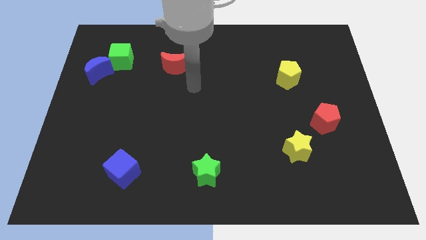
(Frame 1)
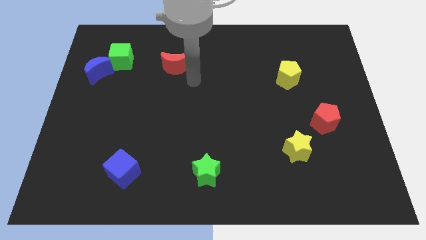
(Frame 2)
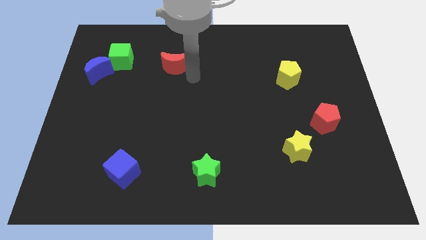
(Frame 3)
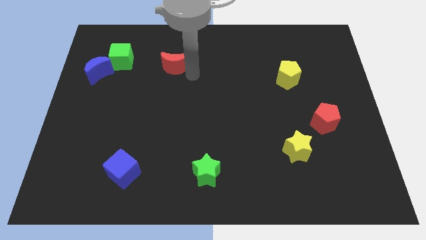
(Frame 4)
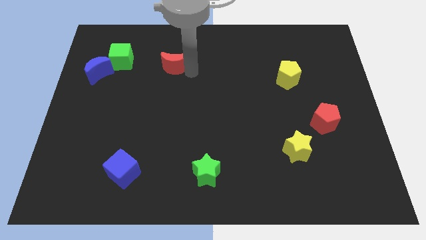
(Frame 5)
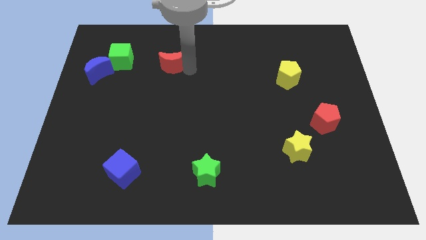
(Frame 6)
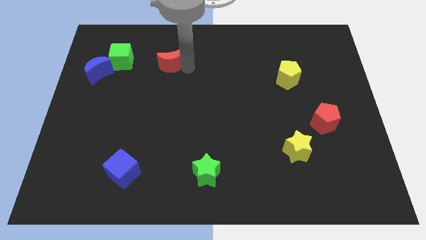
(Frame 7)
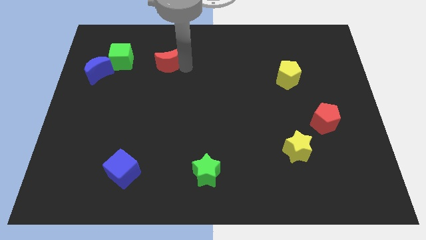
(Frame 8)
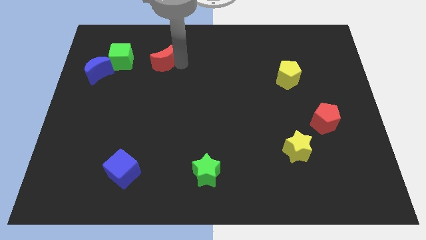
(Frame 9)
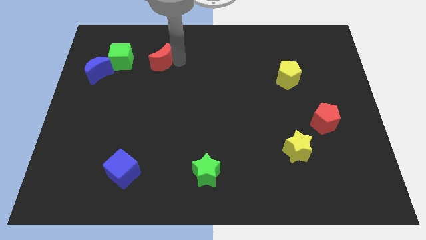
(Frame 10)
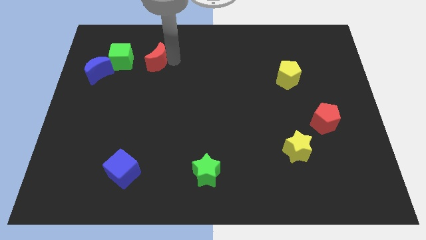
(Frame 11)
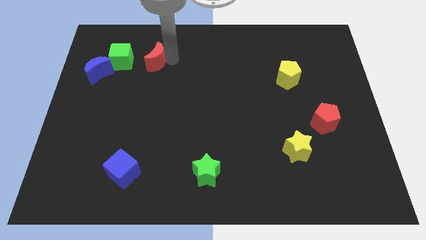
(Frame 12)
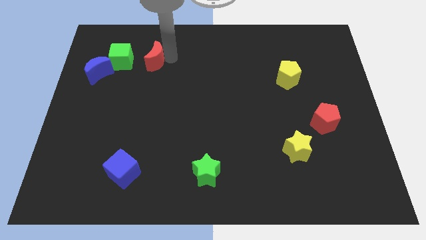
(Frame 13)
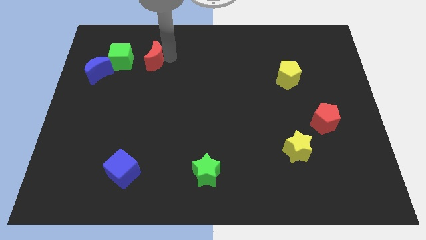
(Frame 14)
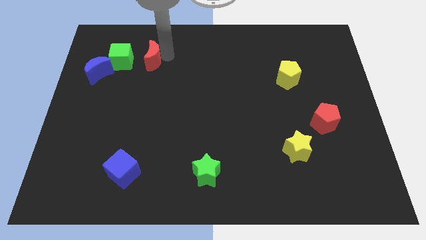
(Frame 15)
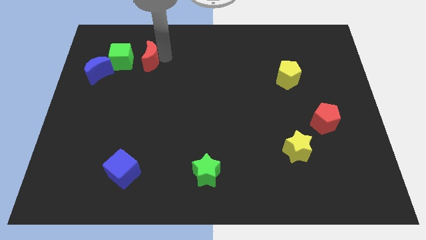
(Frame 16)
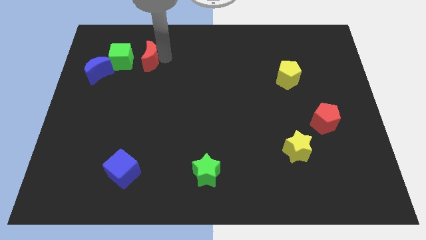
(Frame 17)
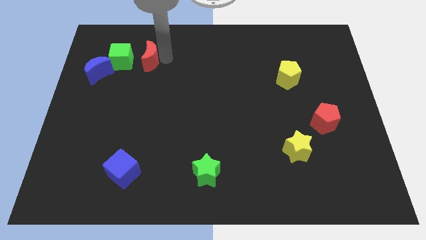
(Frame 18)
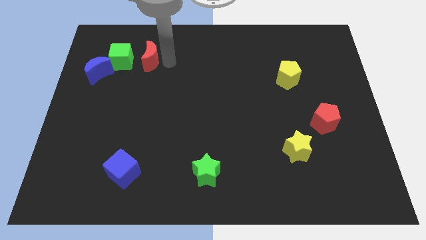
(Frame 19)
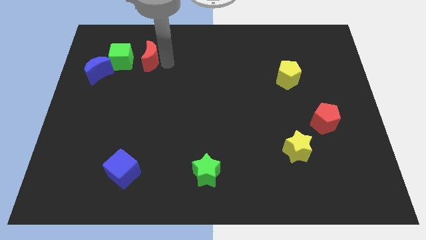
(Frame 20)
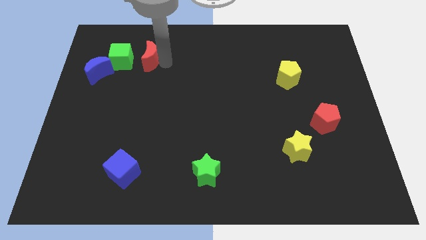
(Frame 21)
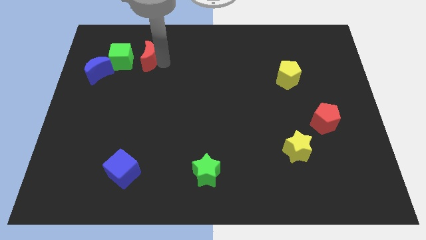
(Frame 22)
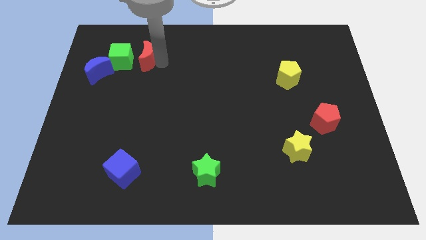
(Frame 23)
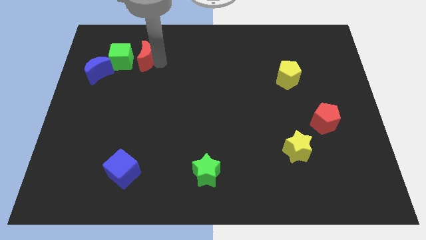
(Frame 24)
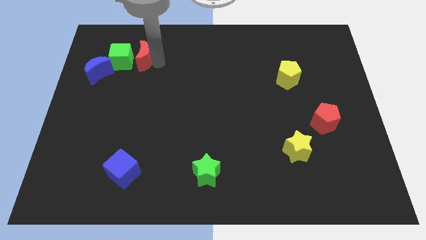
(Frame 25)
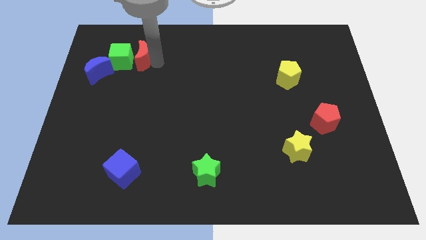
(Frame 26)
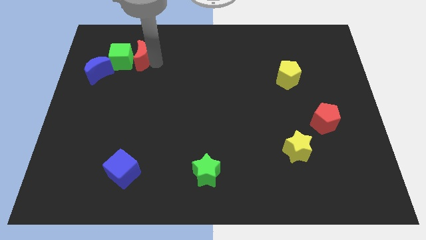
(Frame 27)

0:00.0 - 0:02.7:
slide the red moon next to the green cube

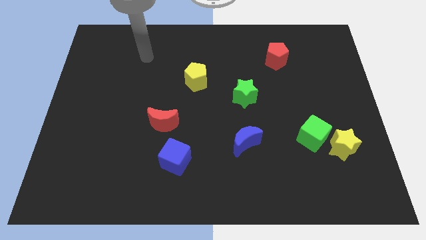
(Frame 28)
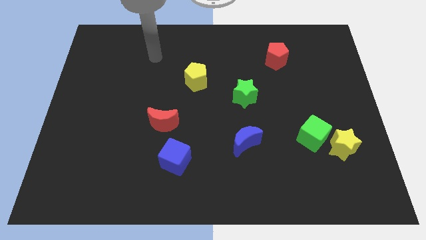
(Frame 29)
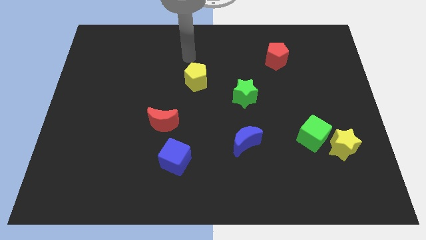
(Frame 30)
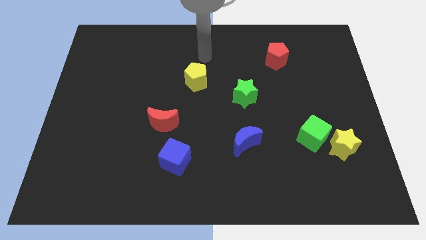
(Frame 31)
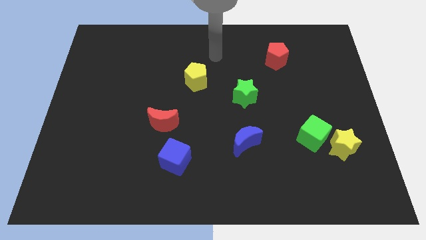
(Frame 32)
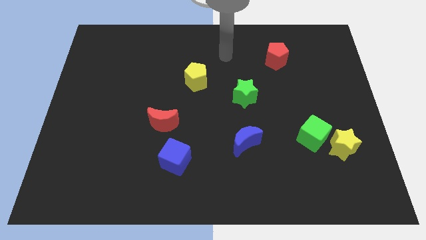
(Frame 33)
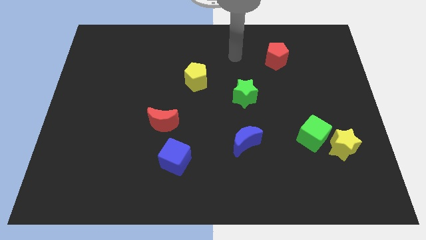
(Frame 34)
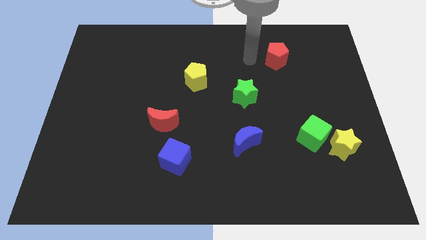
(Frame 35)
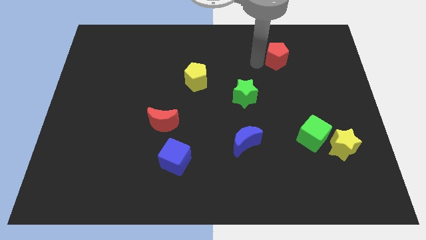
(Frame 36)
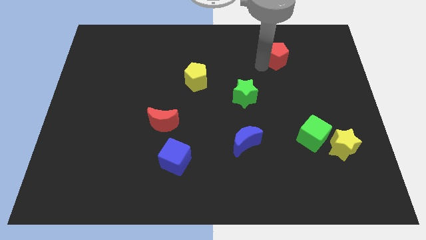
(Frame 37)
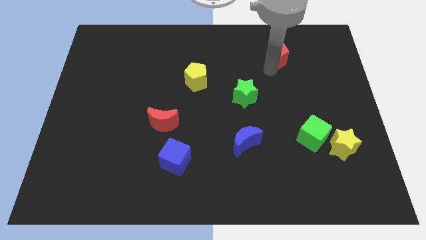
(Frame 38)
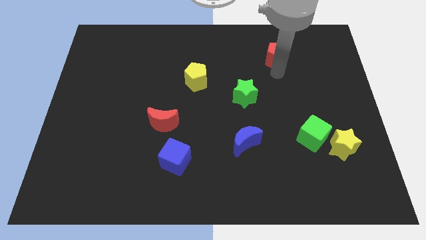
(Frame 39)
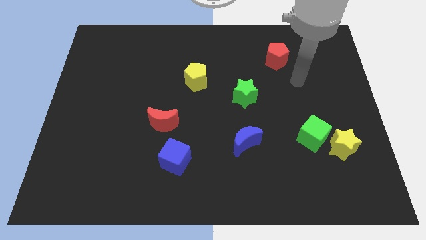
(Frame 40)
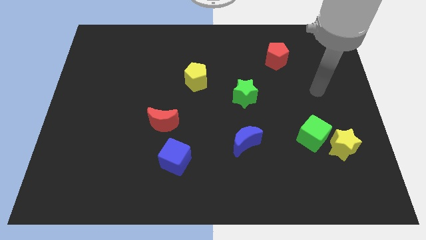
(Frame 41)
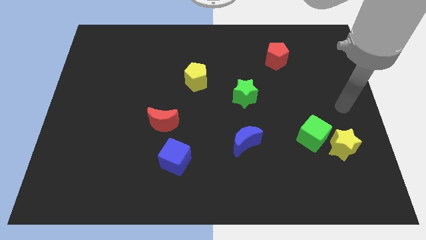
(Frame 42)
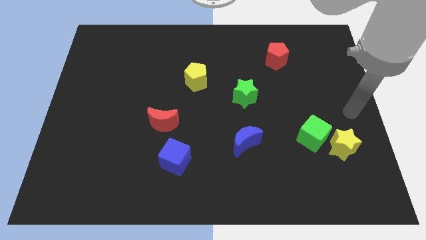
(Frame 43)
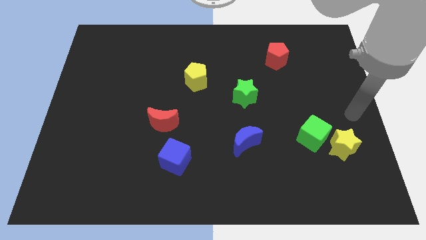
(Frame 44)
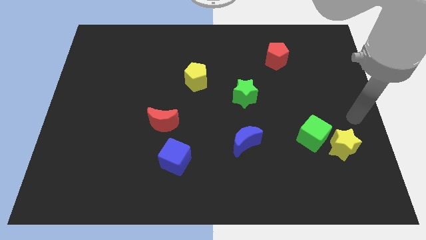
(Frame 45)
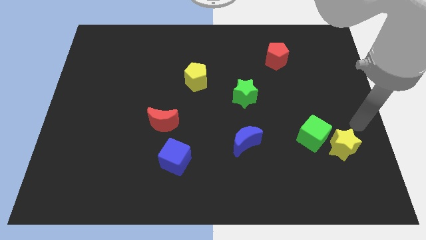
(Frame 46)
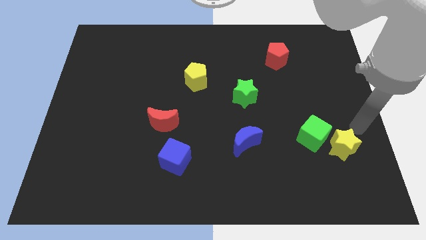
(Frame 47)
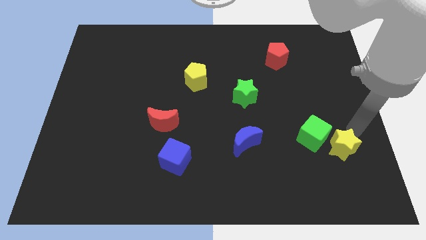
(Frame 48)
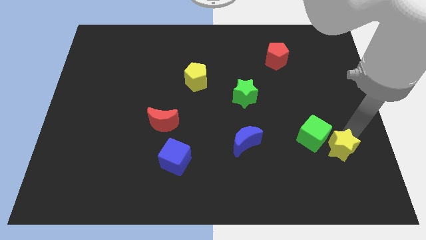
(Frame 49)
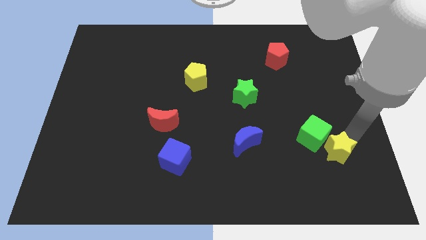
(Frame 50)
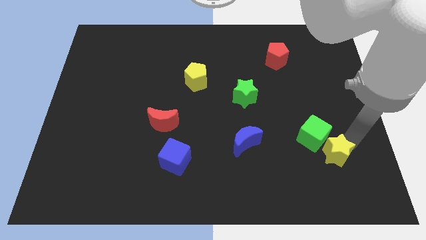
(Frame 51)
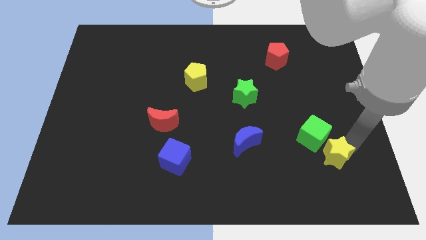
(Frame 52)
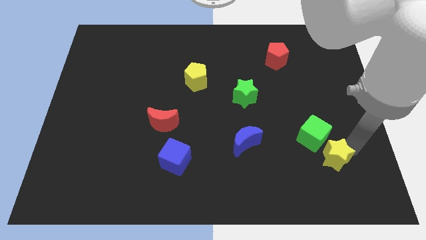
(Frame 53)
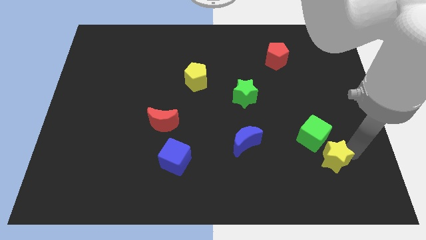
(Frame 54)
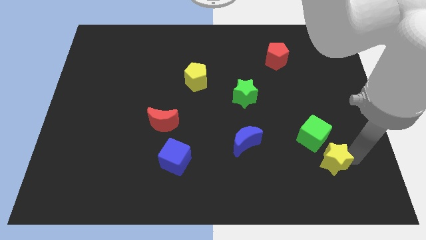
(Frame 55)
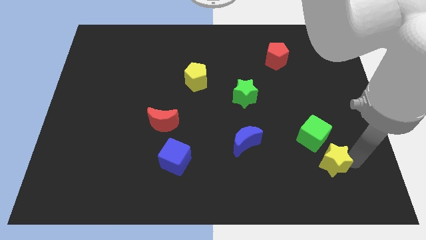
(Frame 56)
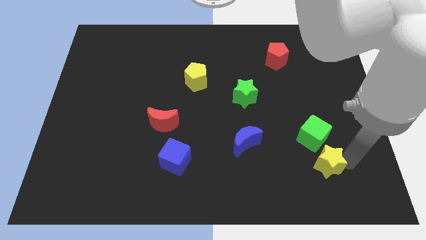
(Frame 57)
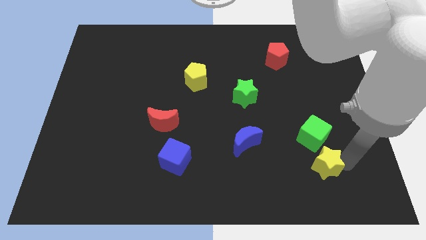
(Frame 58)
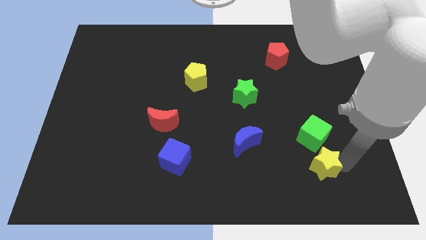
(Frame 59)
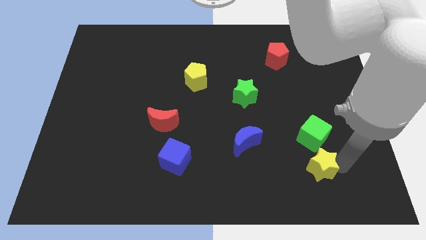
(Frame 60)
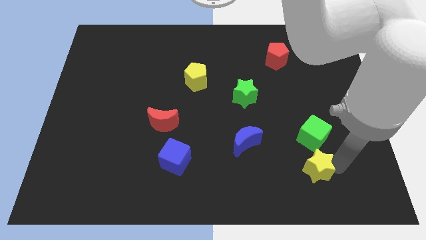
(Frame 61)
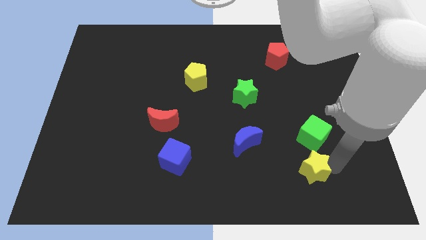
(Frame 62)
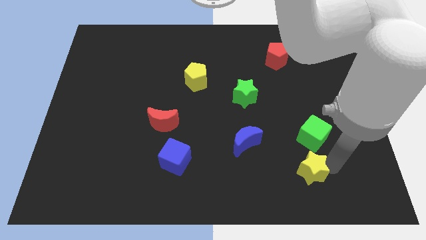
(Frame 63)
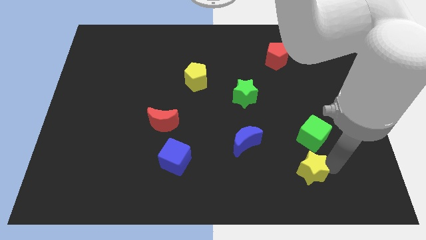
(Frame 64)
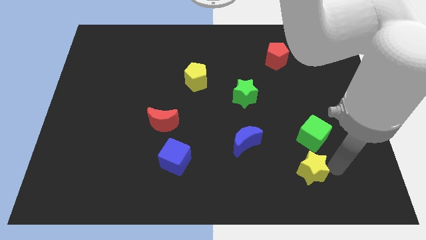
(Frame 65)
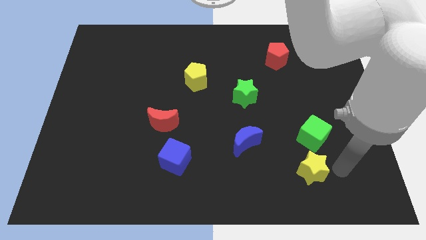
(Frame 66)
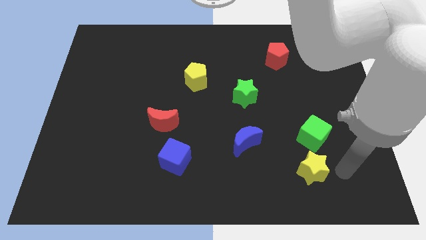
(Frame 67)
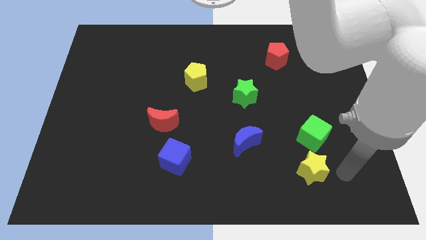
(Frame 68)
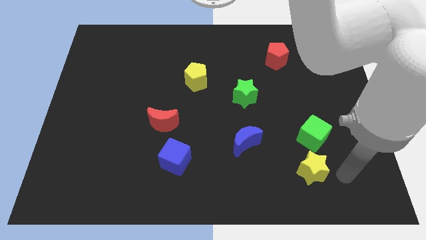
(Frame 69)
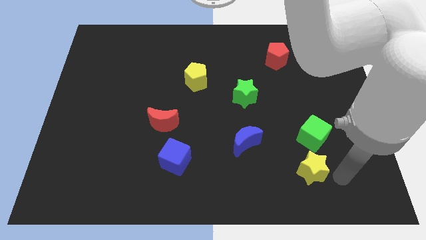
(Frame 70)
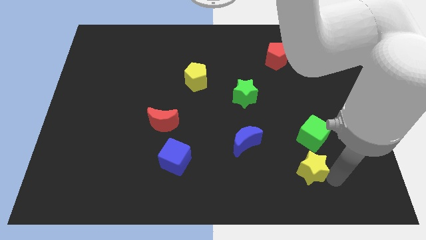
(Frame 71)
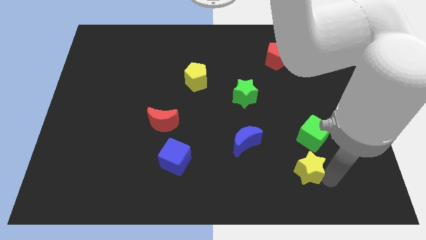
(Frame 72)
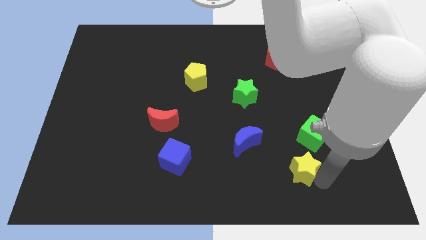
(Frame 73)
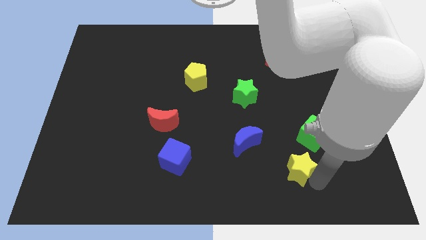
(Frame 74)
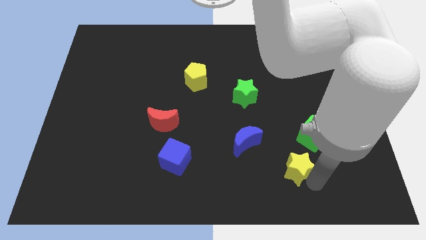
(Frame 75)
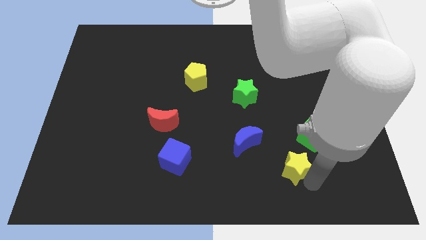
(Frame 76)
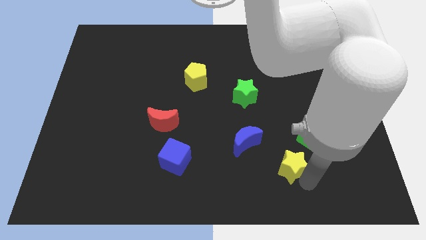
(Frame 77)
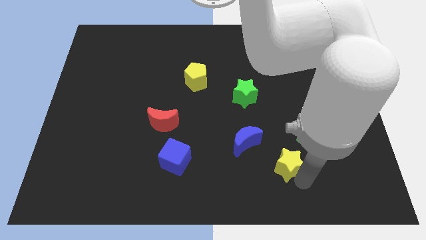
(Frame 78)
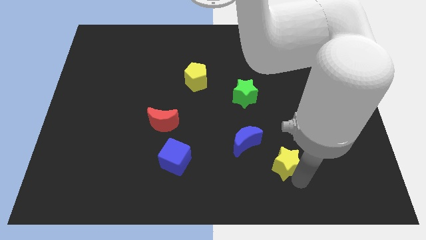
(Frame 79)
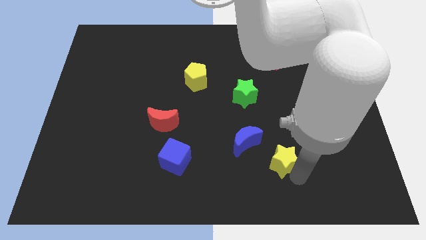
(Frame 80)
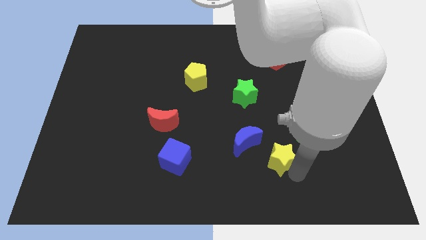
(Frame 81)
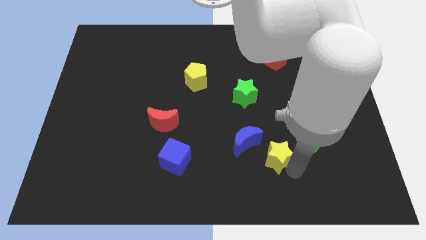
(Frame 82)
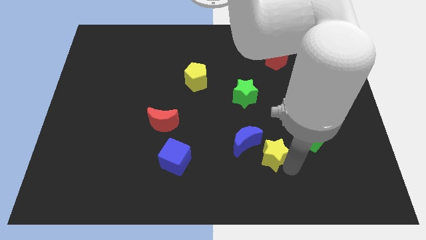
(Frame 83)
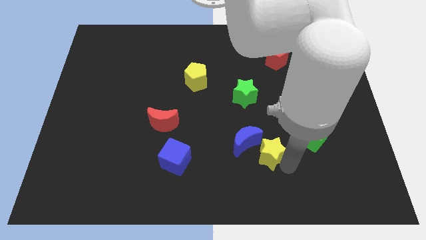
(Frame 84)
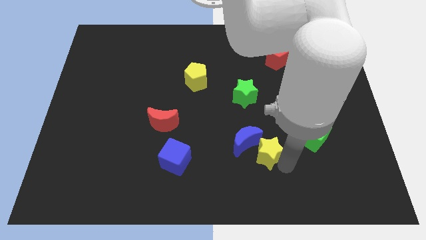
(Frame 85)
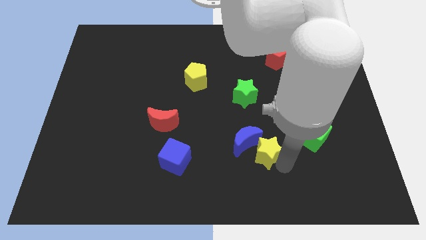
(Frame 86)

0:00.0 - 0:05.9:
put the yellow star next to the blue moon
